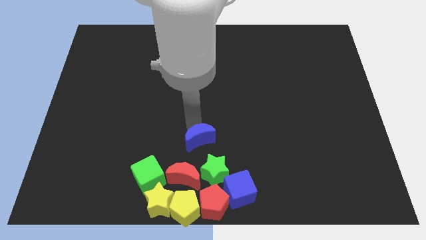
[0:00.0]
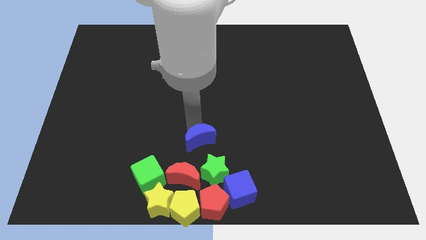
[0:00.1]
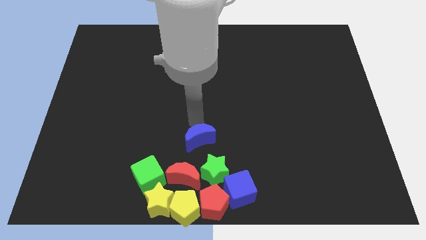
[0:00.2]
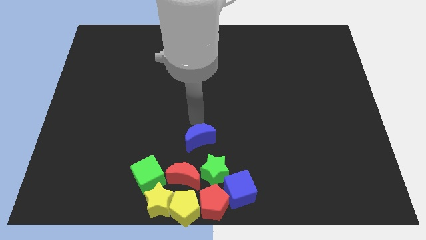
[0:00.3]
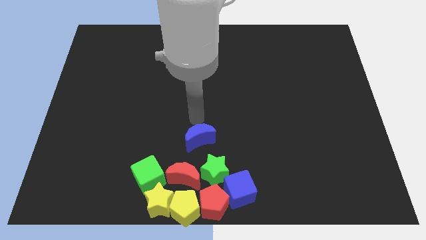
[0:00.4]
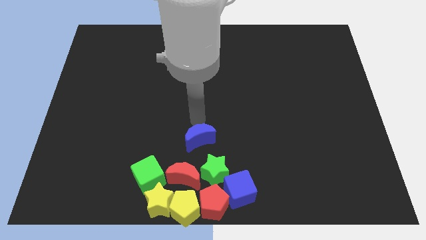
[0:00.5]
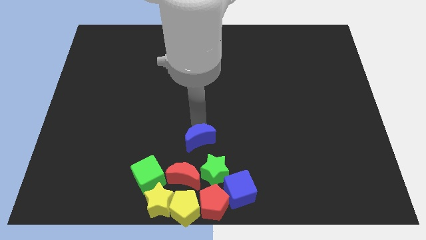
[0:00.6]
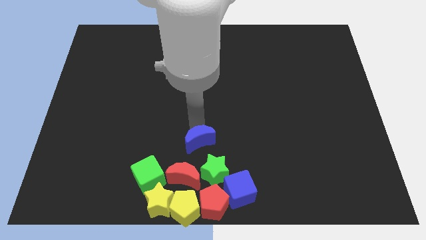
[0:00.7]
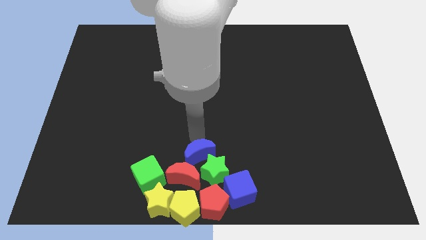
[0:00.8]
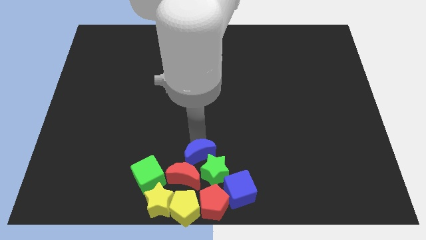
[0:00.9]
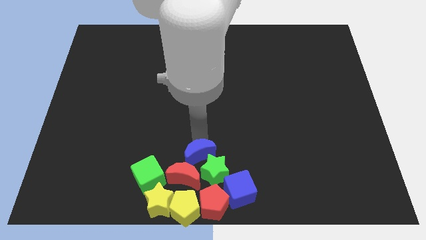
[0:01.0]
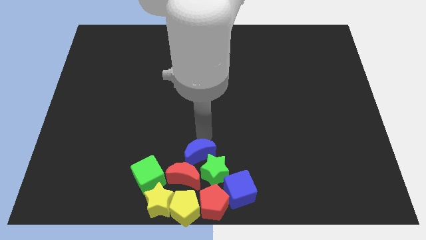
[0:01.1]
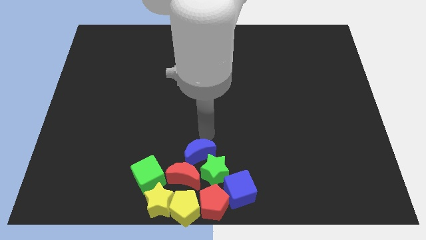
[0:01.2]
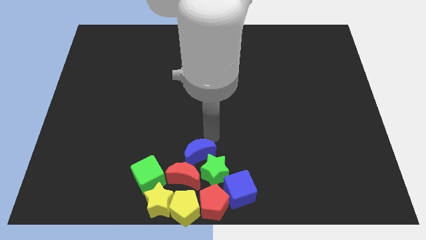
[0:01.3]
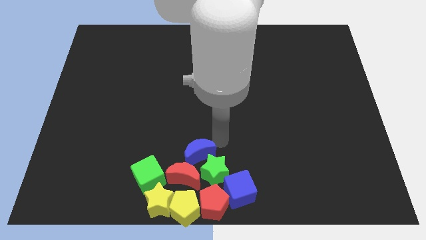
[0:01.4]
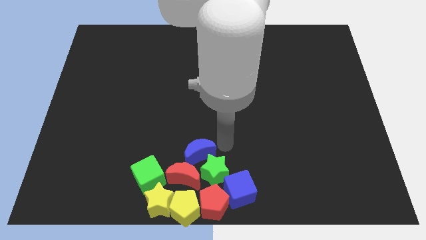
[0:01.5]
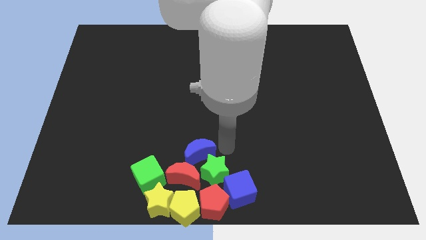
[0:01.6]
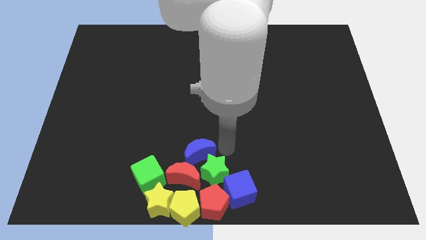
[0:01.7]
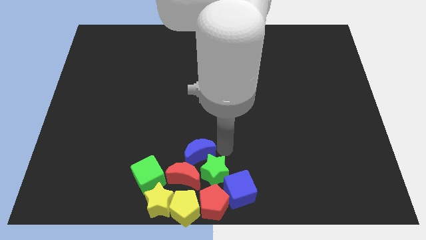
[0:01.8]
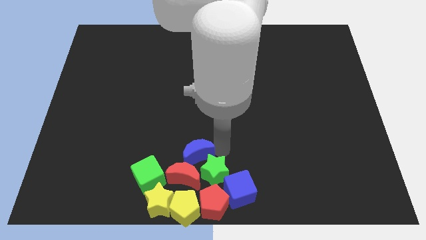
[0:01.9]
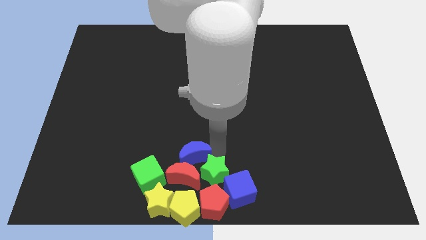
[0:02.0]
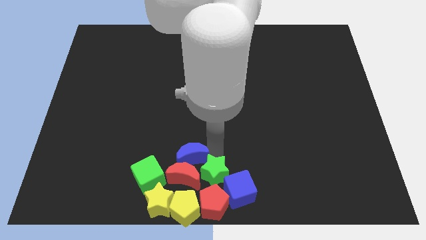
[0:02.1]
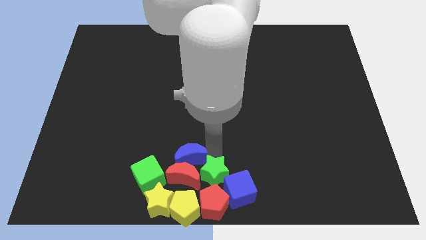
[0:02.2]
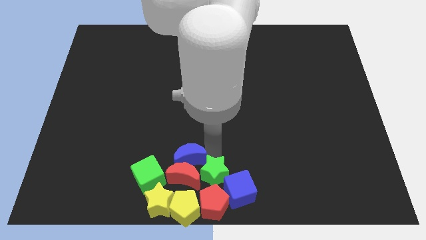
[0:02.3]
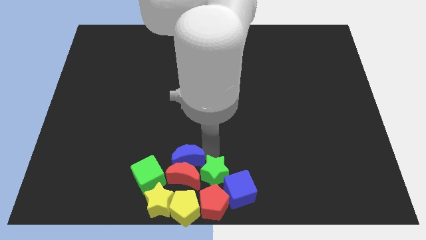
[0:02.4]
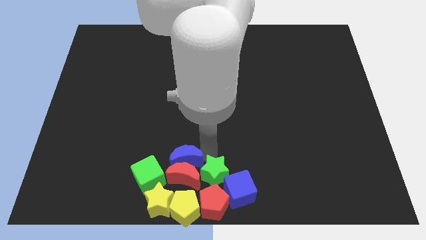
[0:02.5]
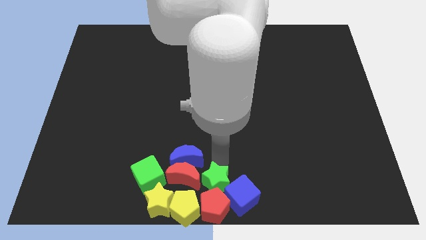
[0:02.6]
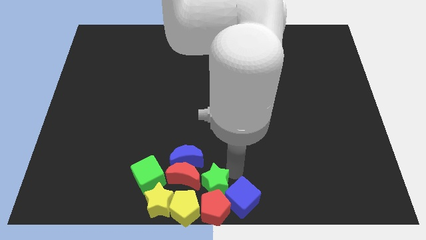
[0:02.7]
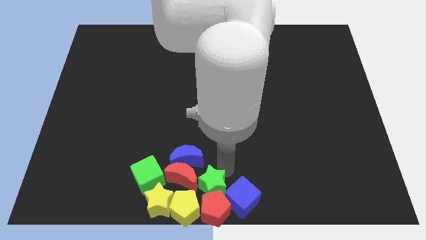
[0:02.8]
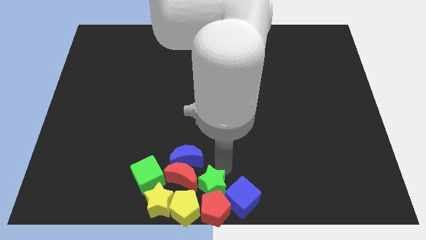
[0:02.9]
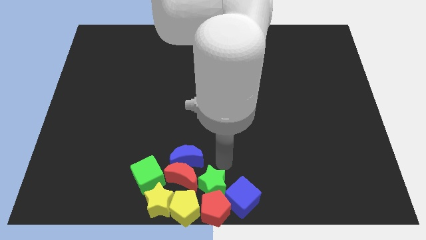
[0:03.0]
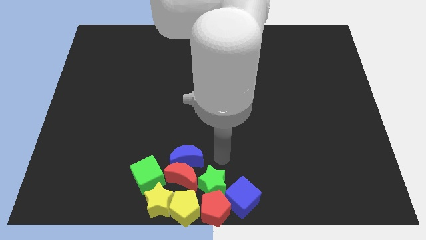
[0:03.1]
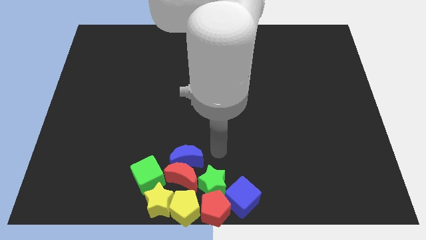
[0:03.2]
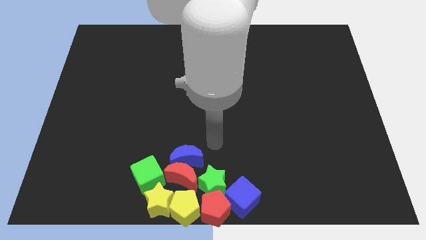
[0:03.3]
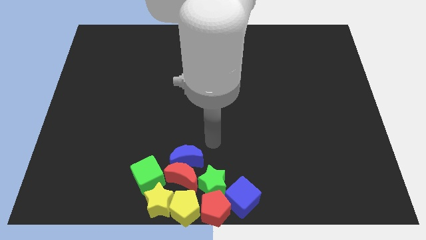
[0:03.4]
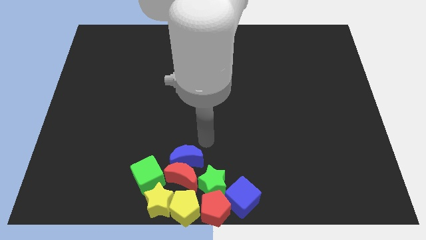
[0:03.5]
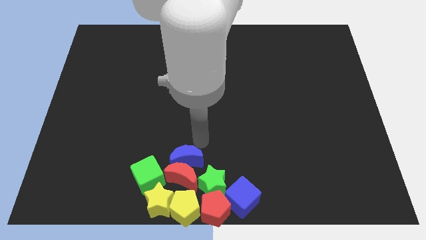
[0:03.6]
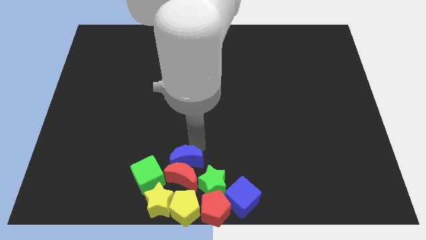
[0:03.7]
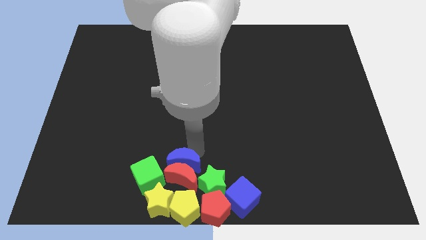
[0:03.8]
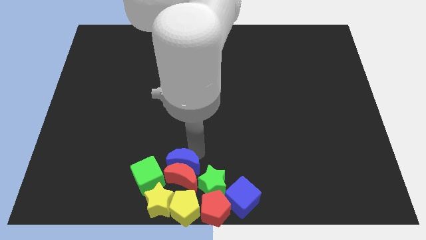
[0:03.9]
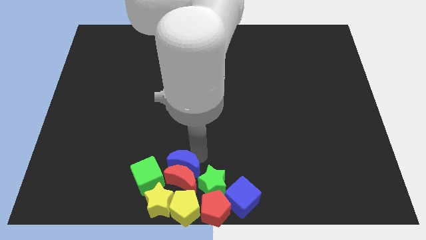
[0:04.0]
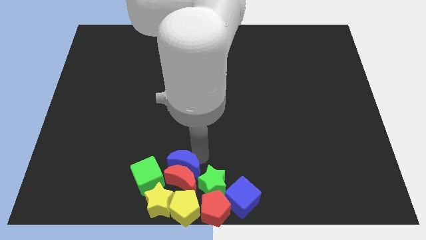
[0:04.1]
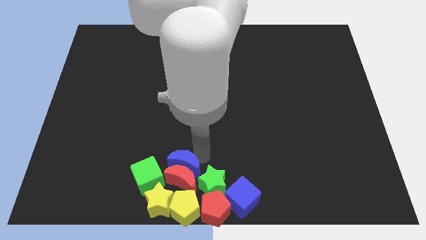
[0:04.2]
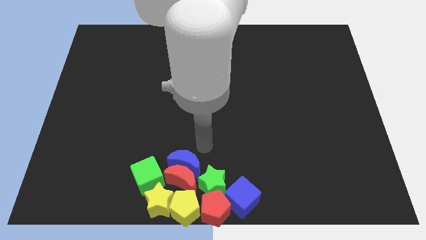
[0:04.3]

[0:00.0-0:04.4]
move the blue crescent into the red crescent

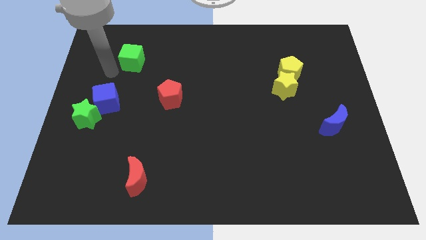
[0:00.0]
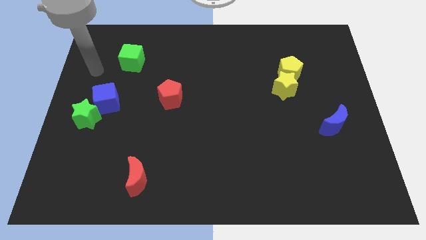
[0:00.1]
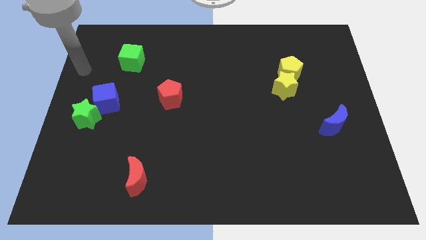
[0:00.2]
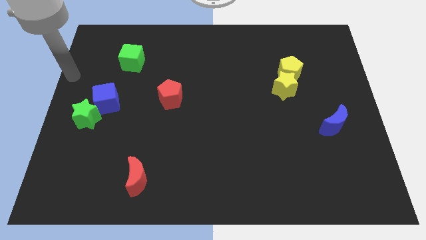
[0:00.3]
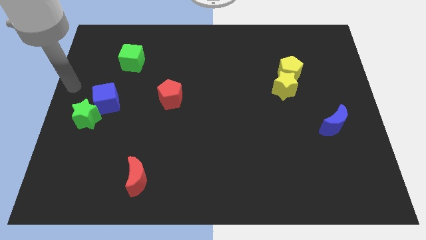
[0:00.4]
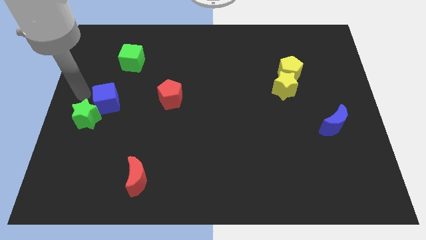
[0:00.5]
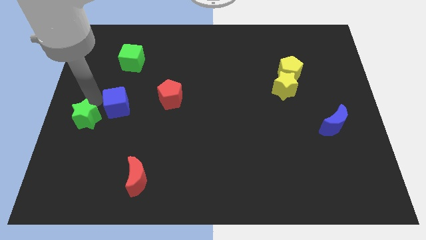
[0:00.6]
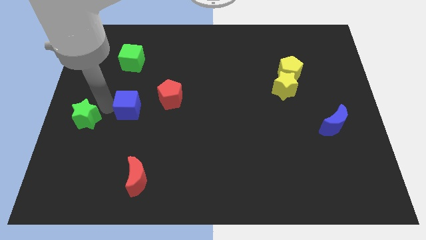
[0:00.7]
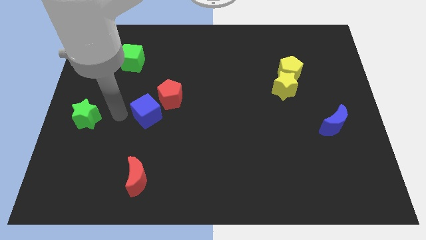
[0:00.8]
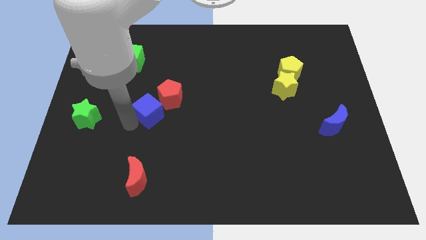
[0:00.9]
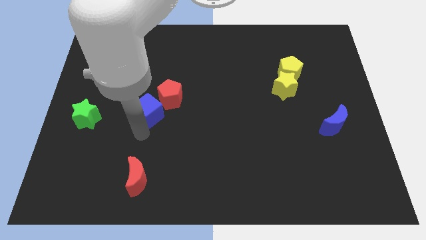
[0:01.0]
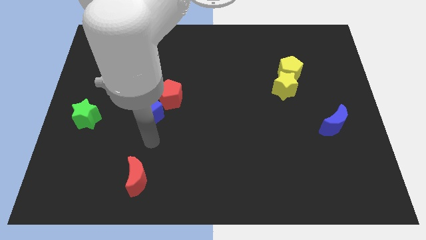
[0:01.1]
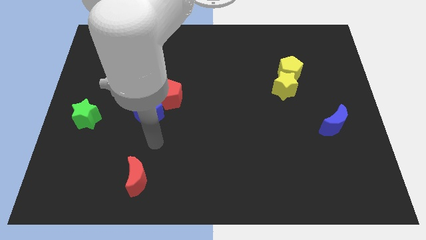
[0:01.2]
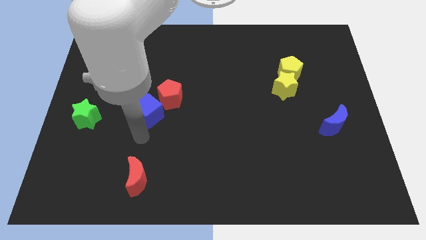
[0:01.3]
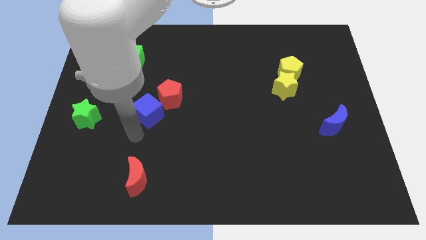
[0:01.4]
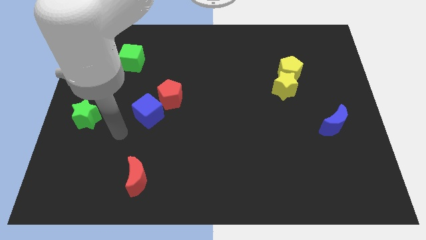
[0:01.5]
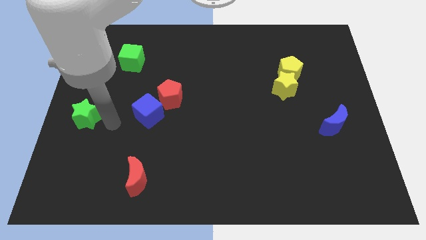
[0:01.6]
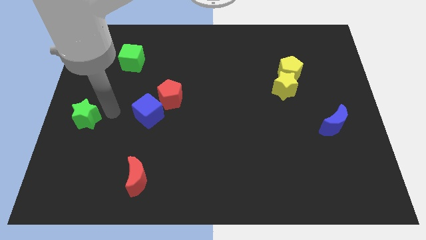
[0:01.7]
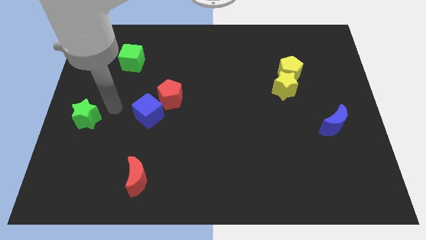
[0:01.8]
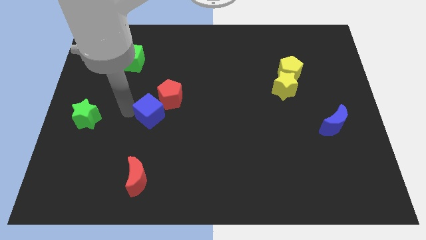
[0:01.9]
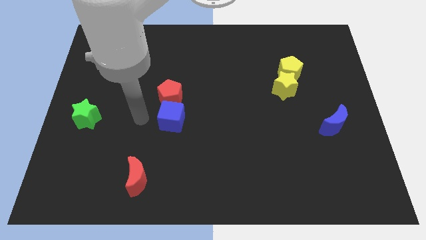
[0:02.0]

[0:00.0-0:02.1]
move the blue cube below the red pentagon

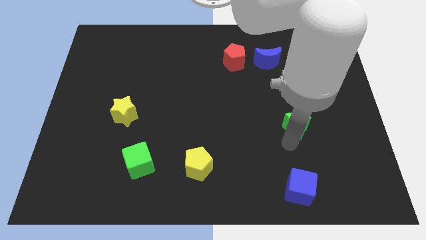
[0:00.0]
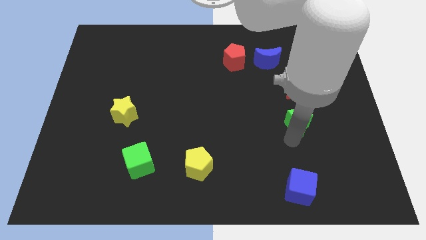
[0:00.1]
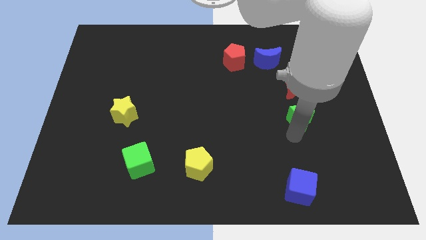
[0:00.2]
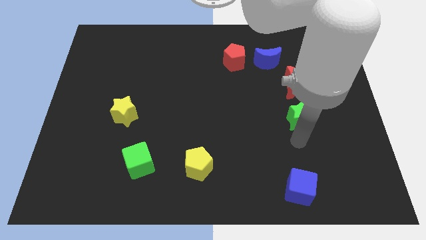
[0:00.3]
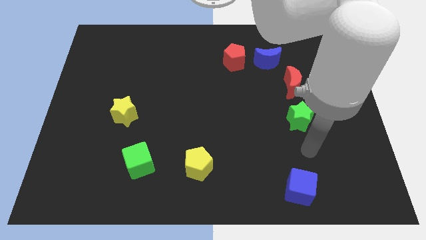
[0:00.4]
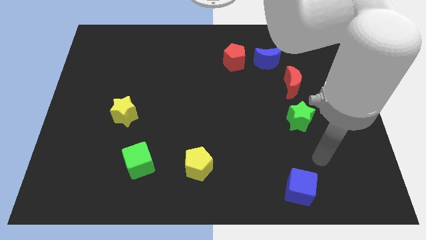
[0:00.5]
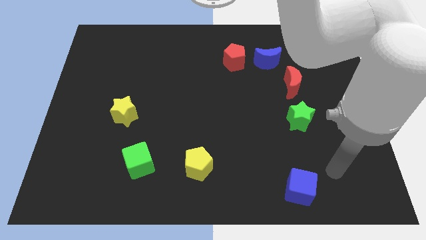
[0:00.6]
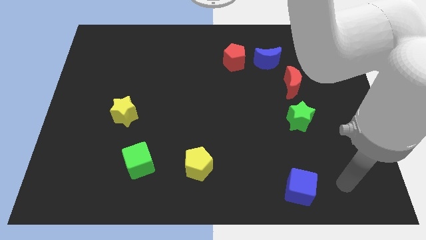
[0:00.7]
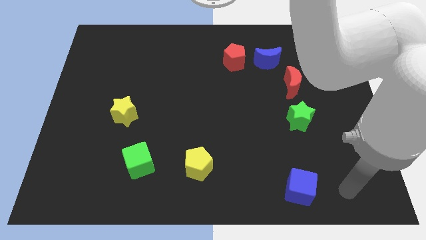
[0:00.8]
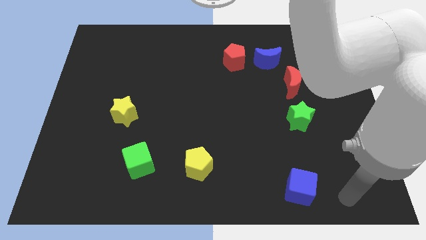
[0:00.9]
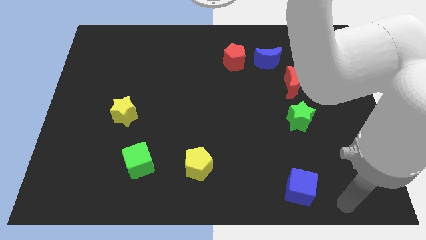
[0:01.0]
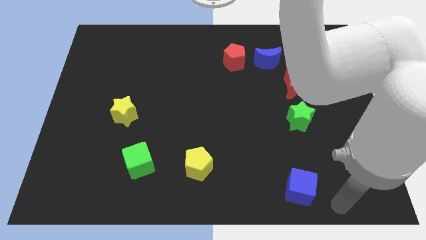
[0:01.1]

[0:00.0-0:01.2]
move green star slightly up

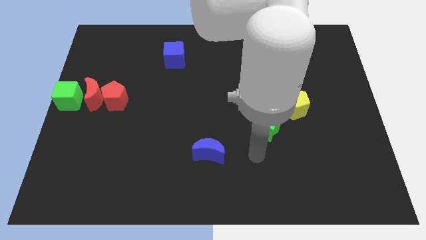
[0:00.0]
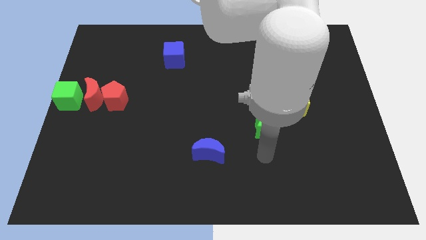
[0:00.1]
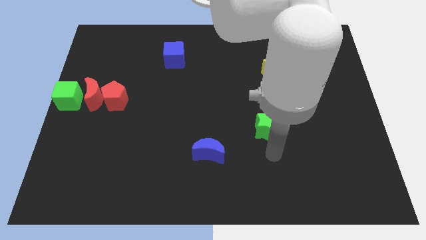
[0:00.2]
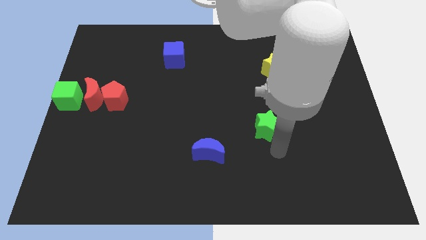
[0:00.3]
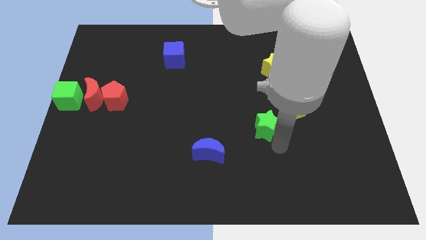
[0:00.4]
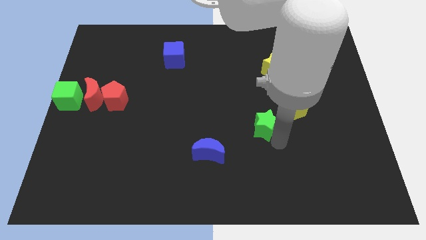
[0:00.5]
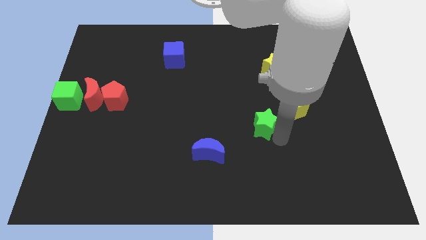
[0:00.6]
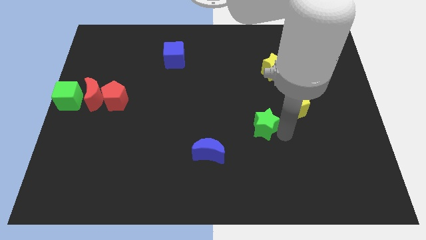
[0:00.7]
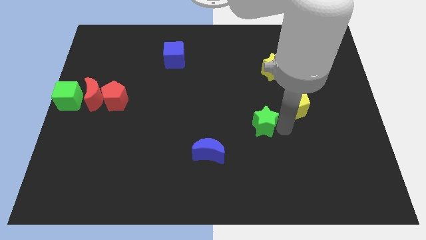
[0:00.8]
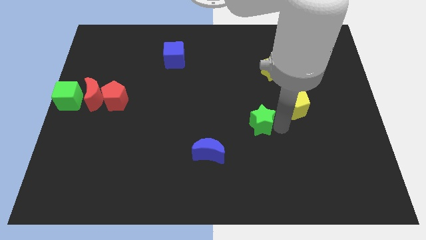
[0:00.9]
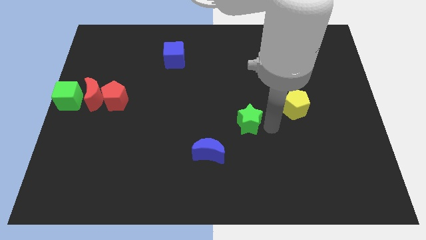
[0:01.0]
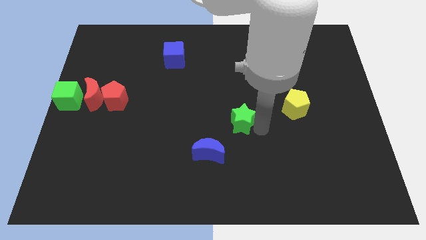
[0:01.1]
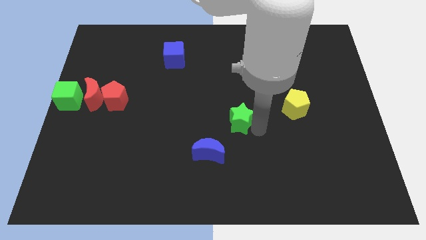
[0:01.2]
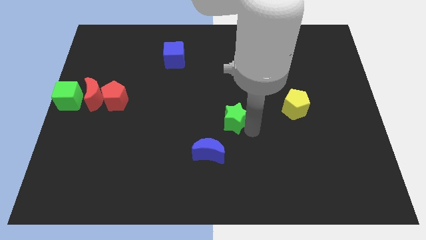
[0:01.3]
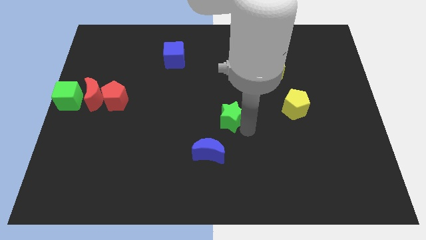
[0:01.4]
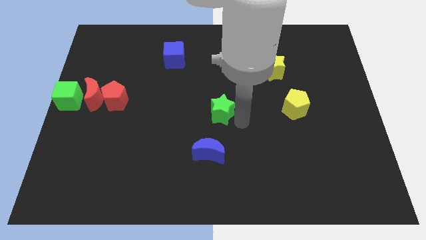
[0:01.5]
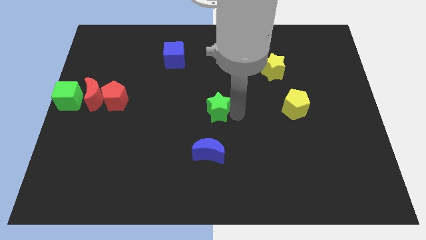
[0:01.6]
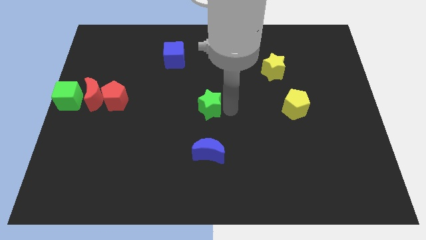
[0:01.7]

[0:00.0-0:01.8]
push the green star towards the center of the board
